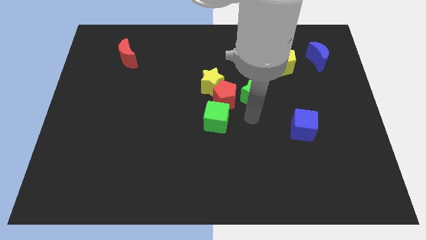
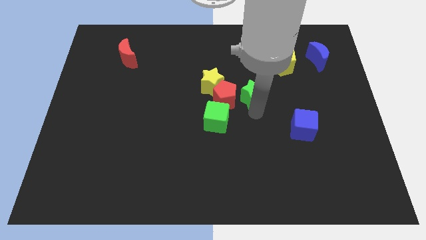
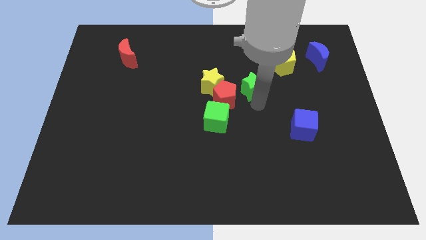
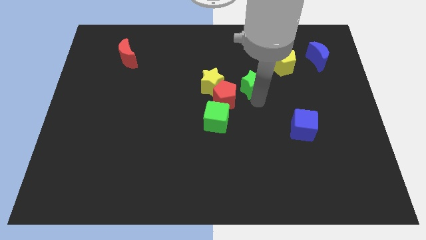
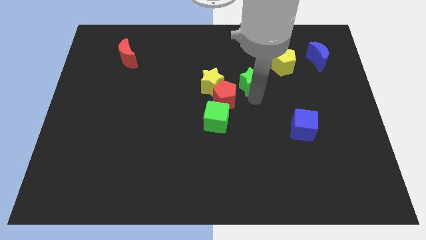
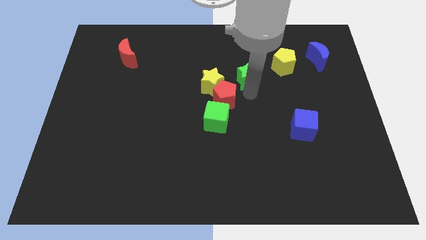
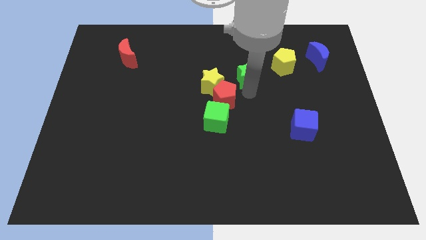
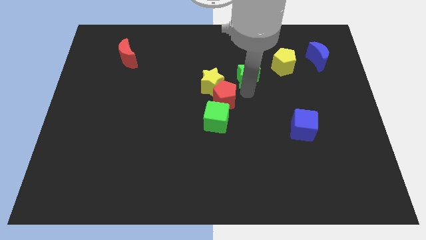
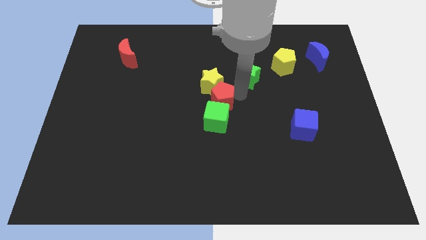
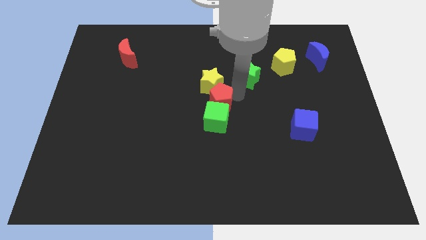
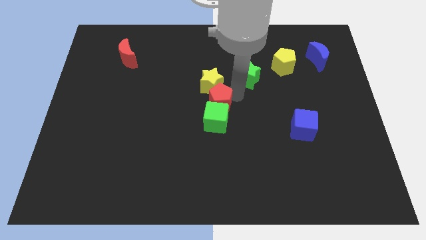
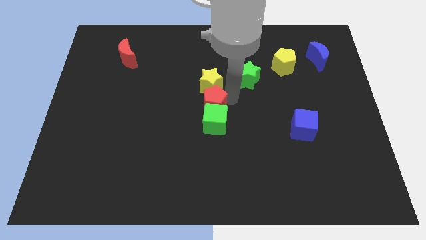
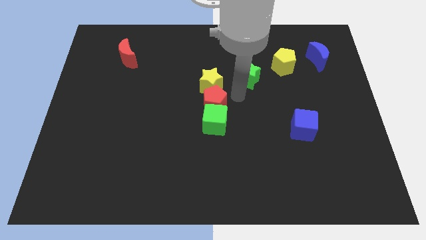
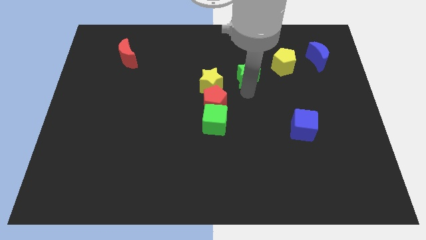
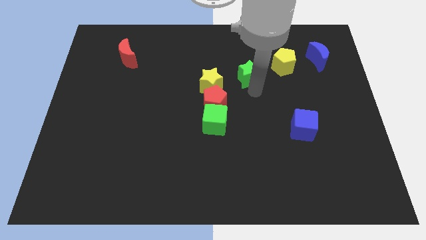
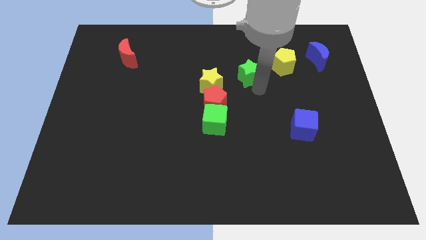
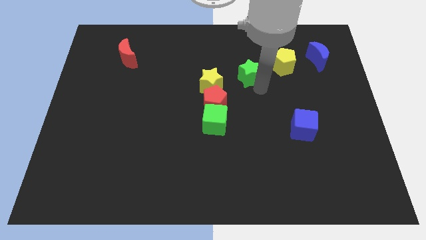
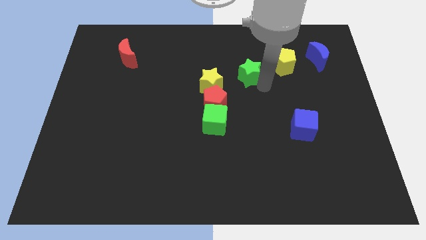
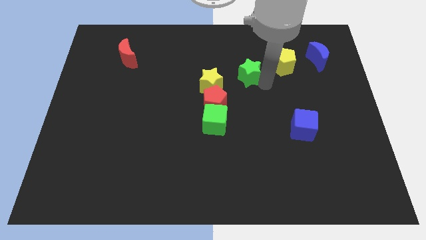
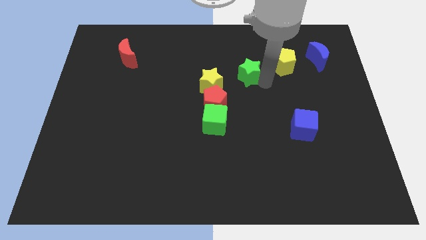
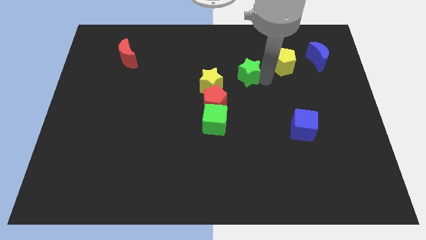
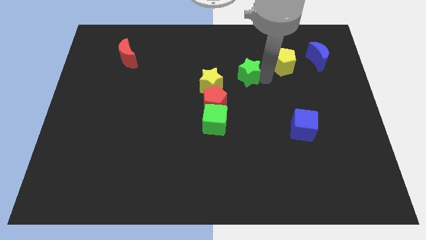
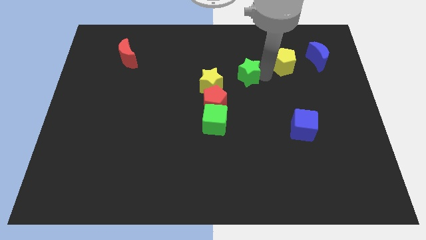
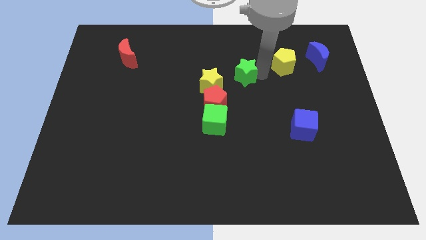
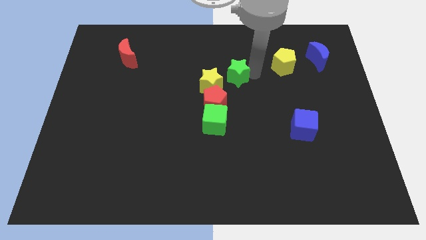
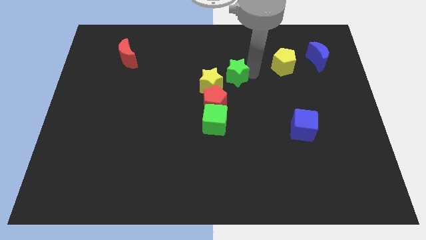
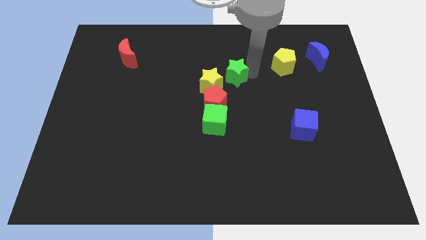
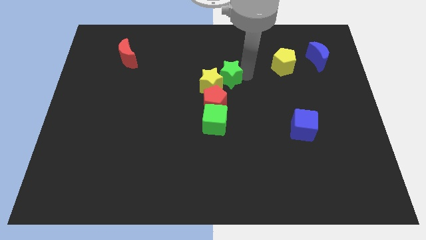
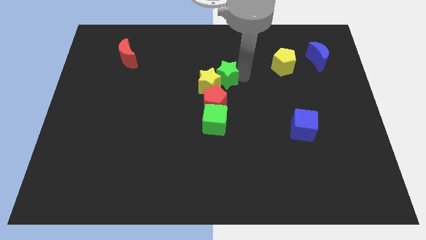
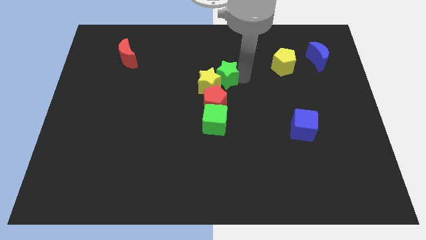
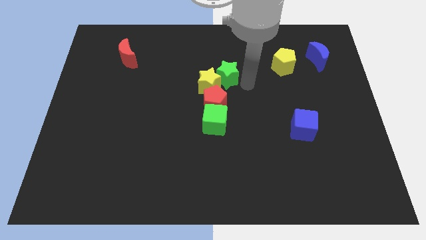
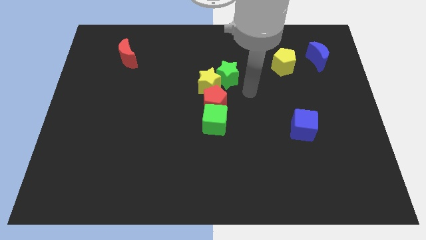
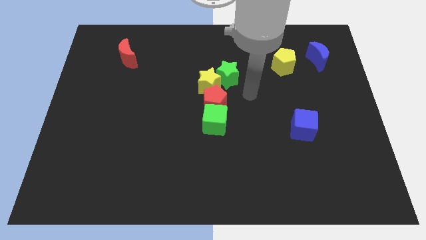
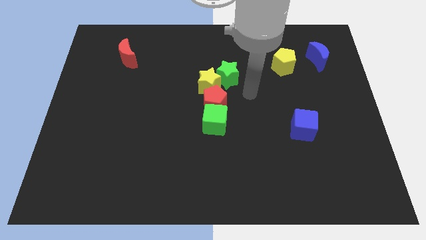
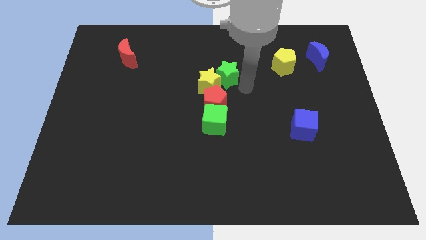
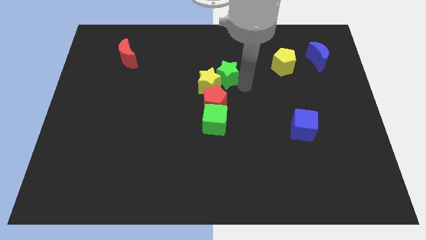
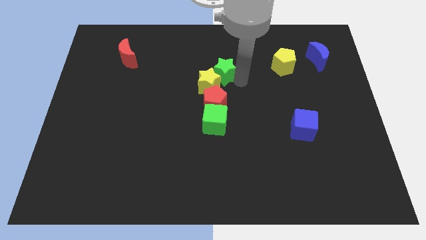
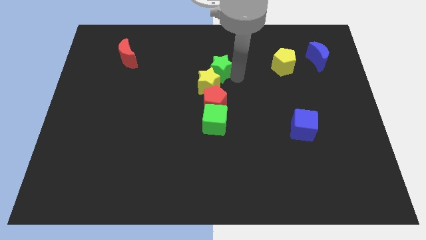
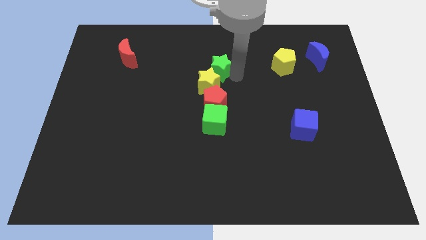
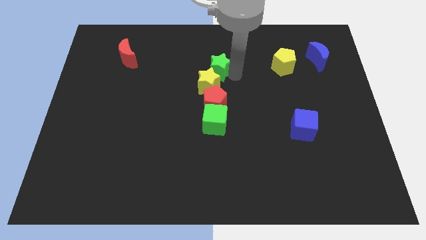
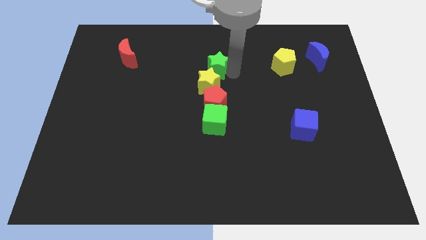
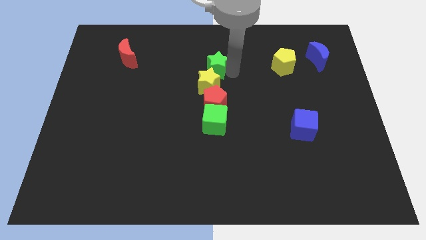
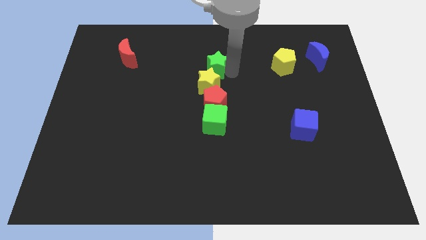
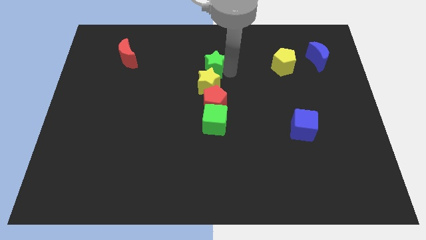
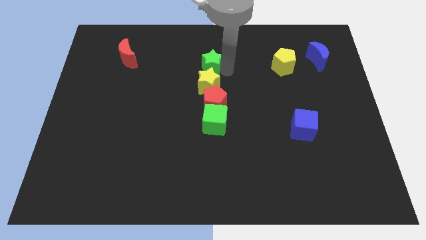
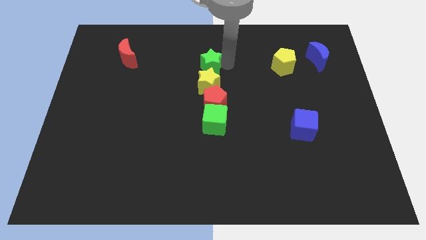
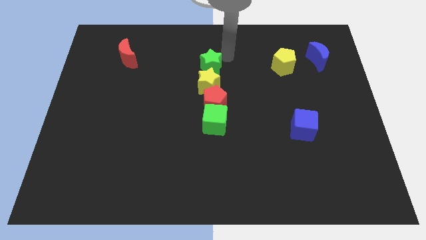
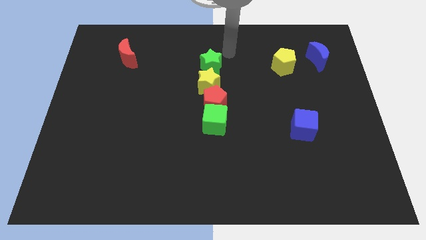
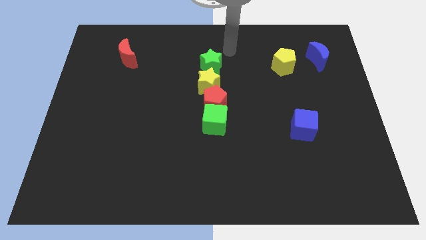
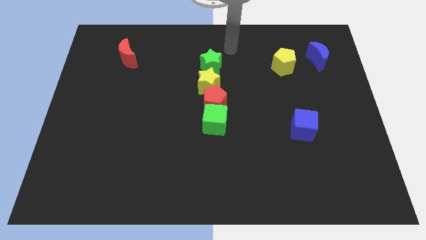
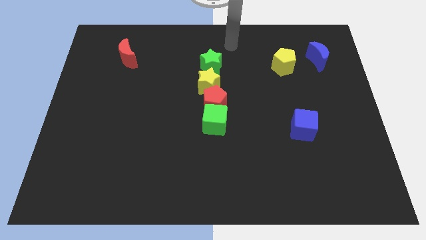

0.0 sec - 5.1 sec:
place the green star above the yellow star

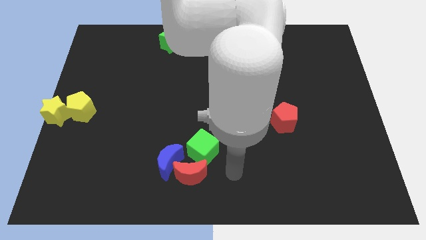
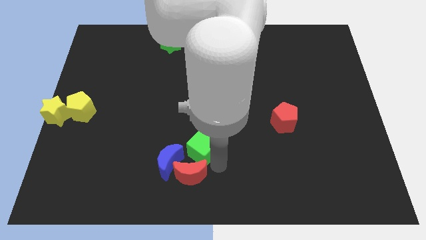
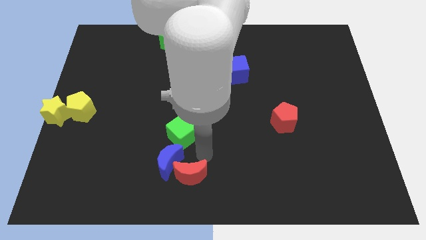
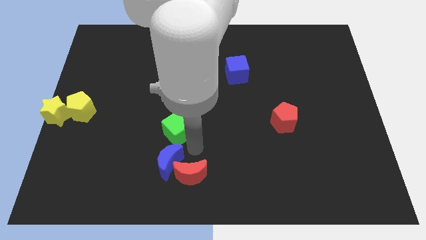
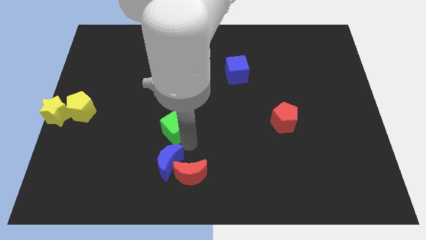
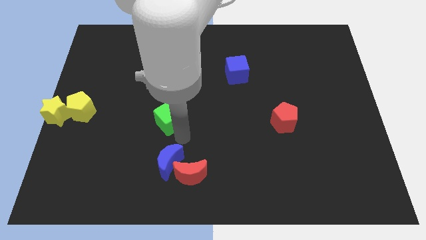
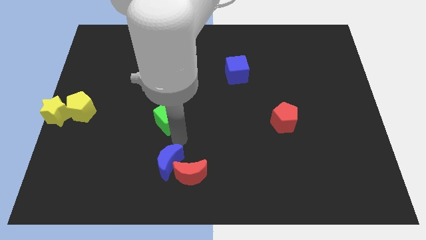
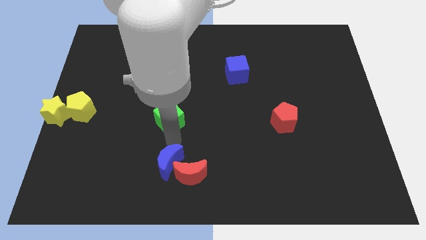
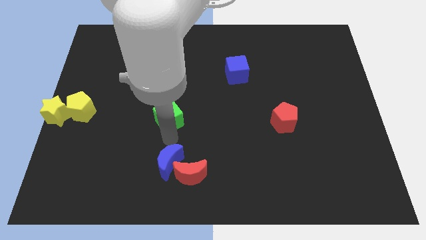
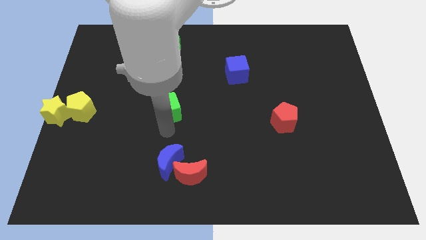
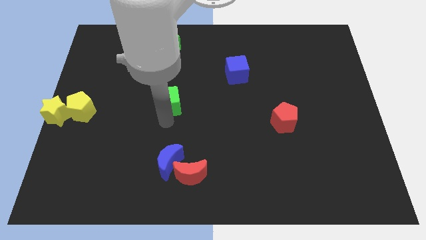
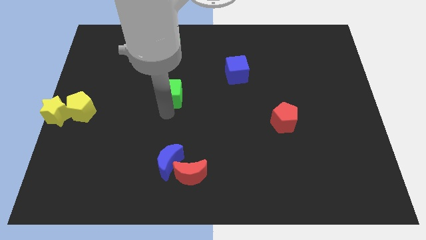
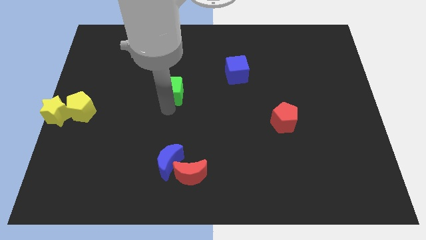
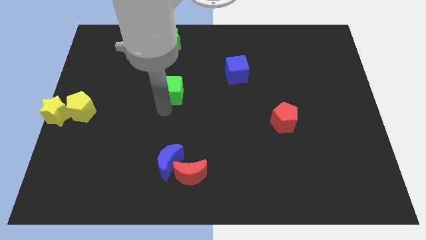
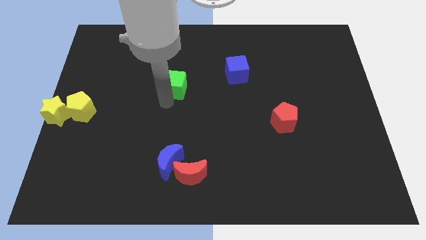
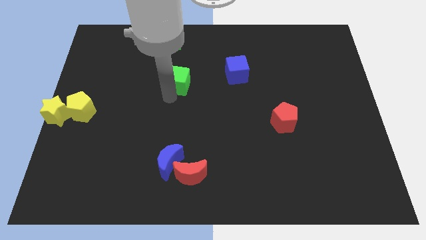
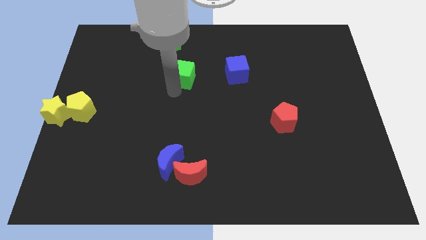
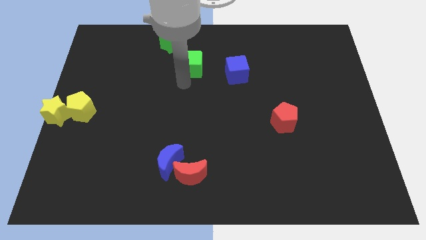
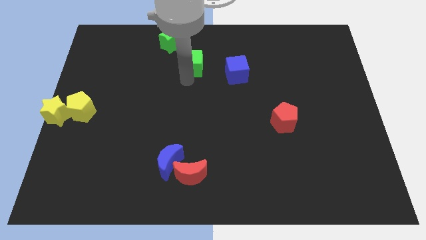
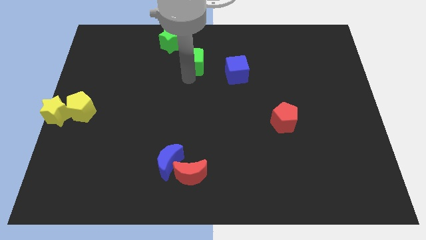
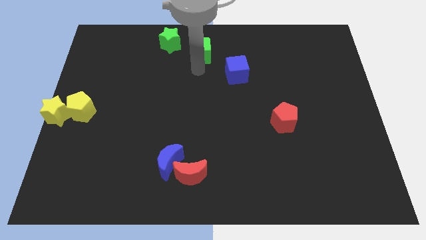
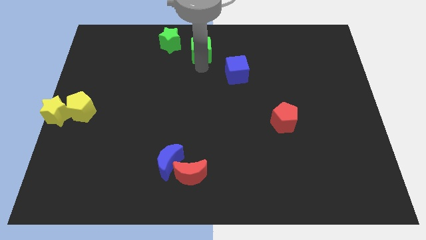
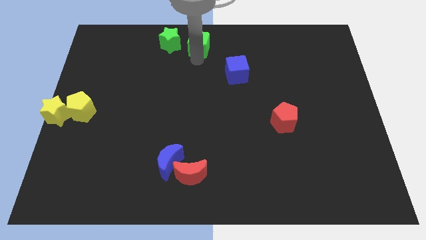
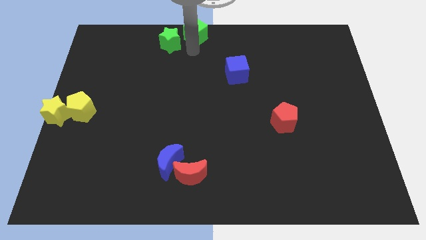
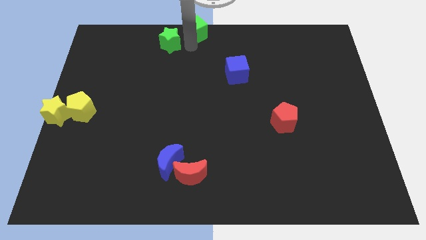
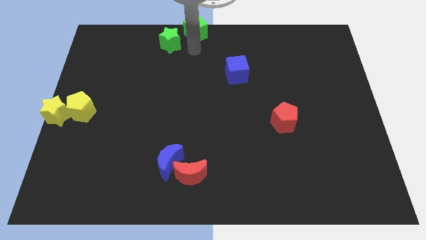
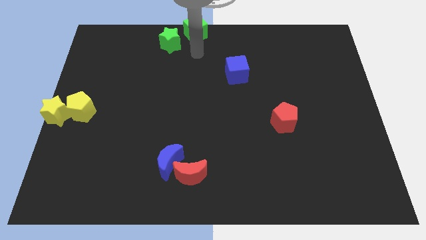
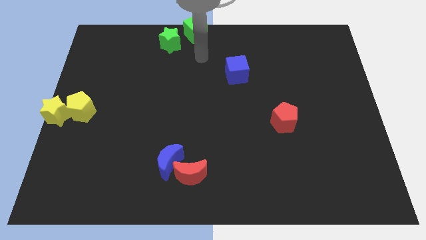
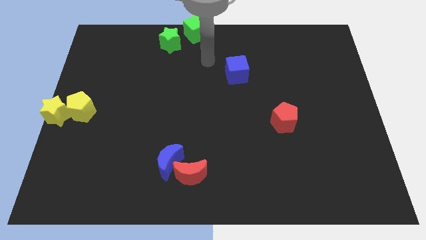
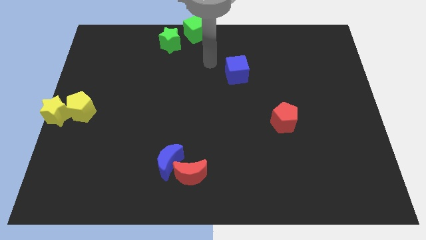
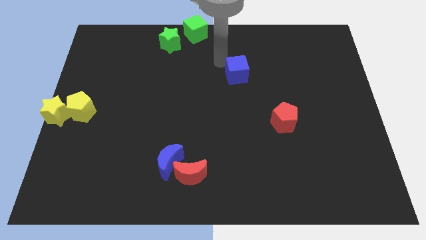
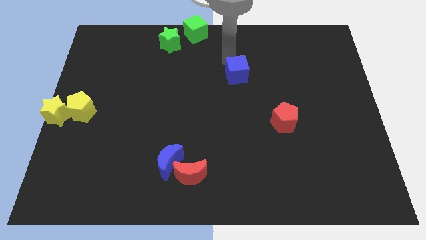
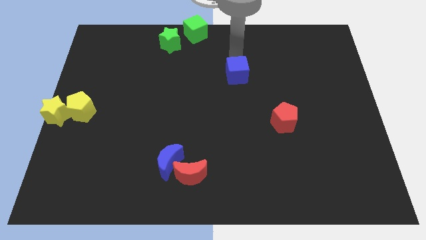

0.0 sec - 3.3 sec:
move the green cube towards the top center of the board
